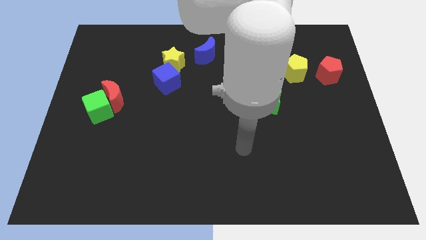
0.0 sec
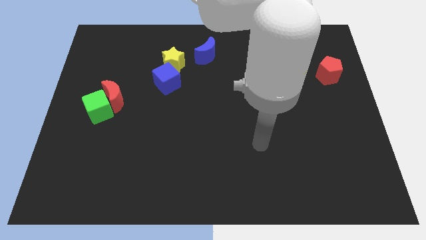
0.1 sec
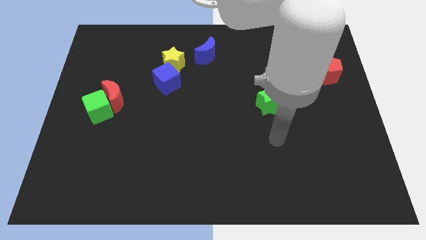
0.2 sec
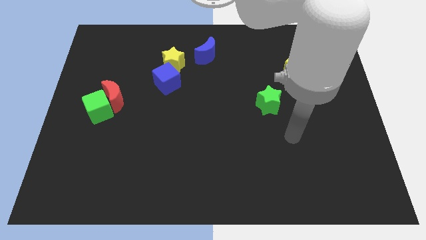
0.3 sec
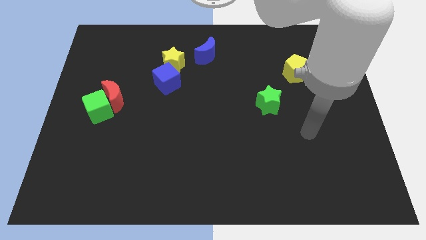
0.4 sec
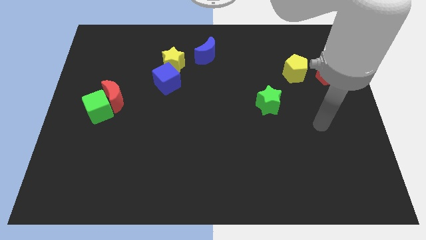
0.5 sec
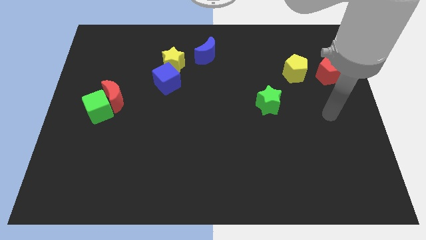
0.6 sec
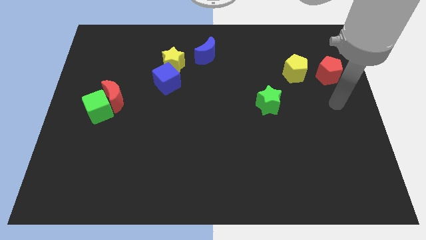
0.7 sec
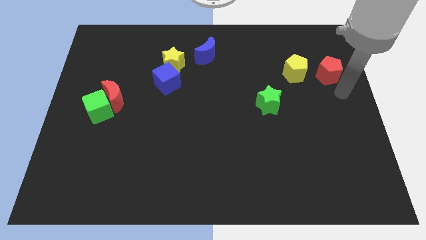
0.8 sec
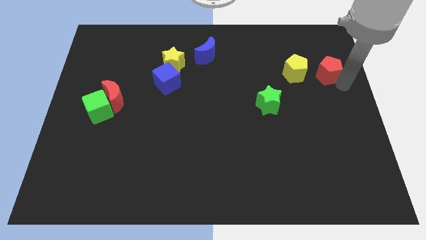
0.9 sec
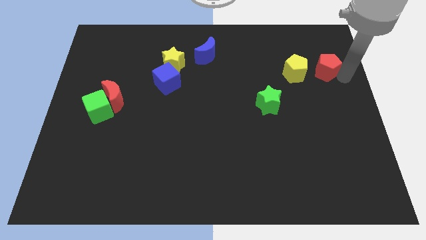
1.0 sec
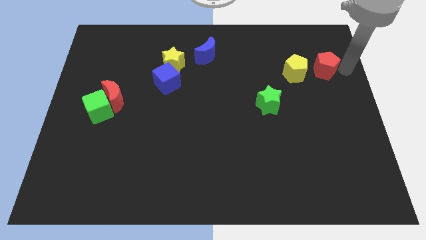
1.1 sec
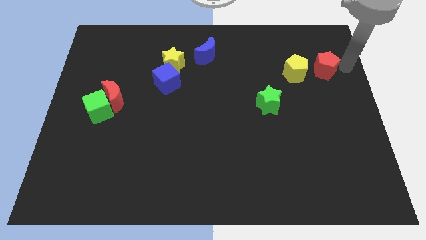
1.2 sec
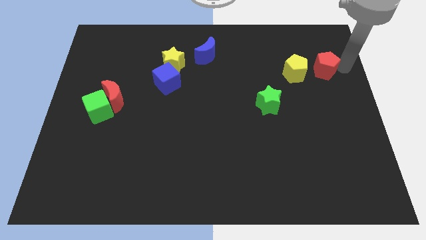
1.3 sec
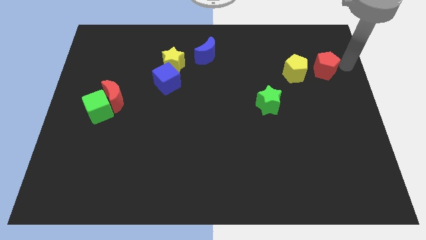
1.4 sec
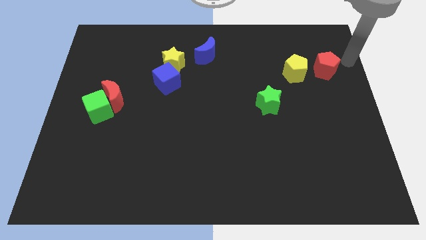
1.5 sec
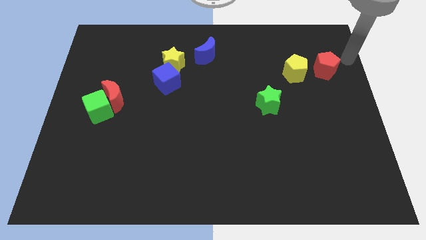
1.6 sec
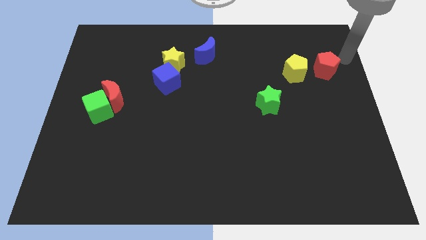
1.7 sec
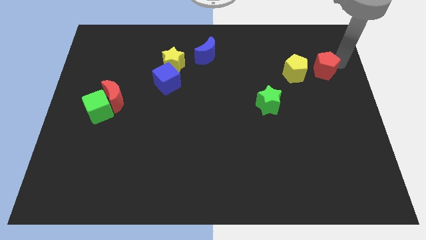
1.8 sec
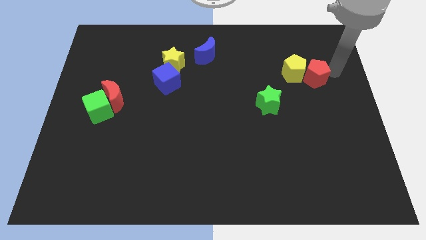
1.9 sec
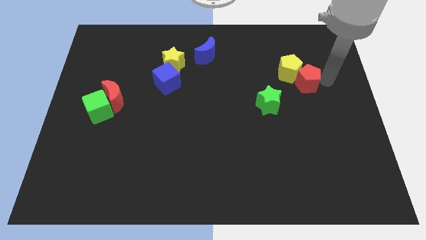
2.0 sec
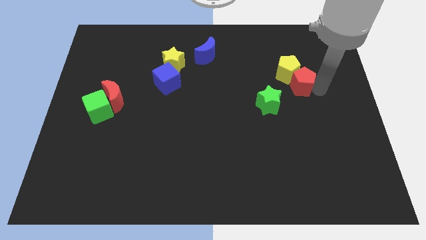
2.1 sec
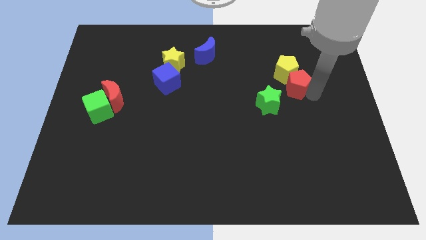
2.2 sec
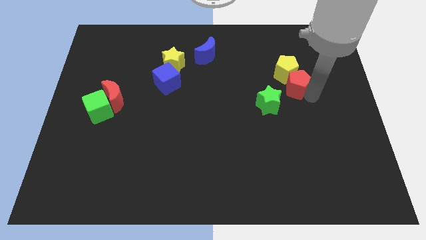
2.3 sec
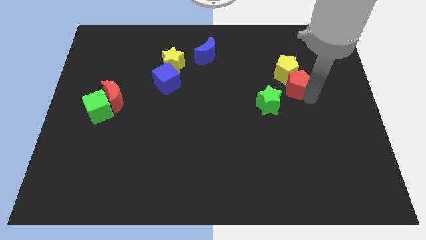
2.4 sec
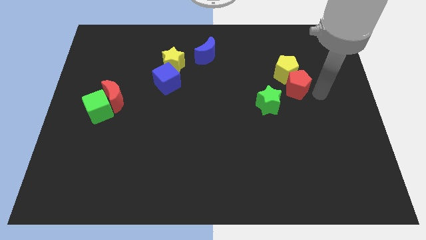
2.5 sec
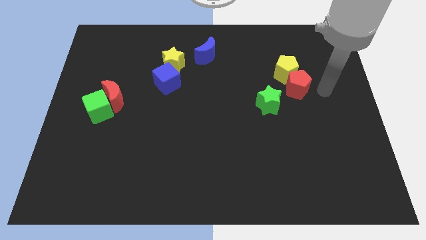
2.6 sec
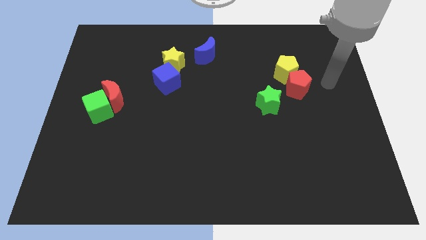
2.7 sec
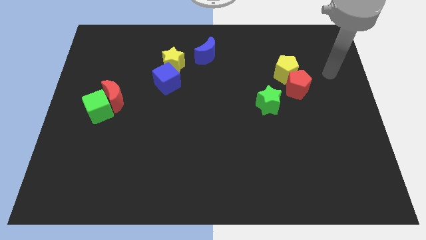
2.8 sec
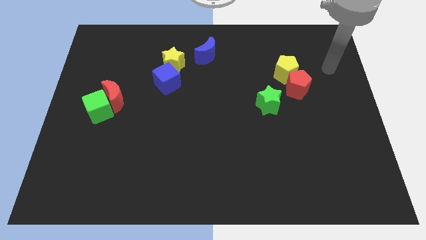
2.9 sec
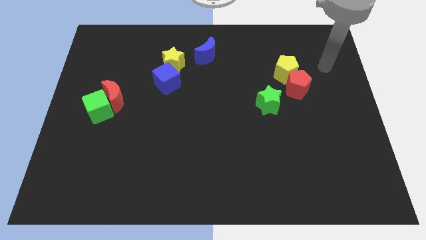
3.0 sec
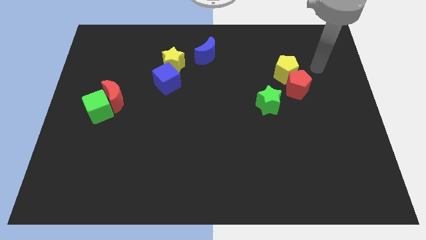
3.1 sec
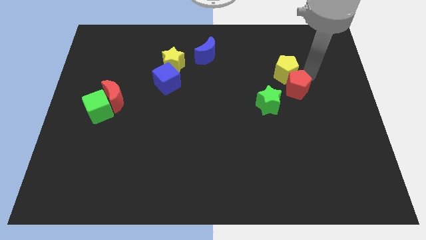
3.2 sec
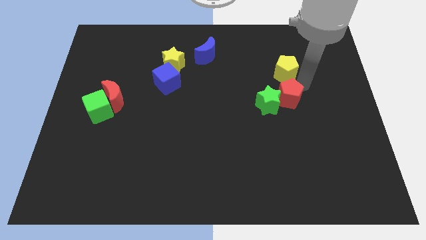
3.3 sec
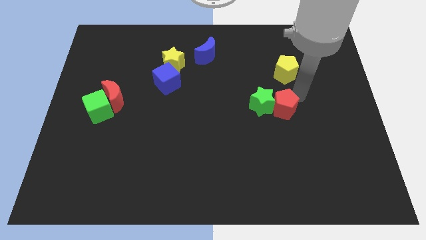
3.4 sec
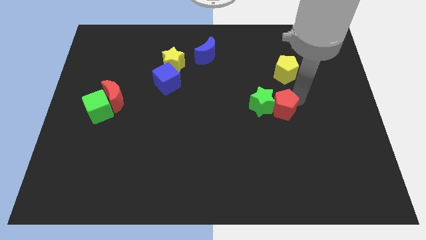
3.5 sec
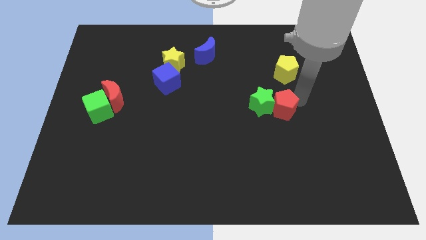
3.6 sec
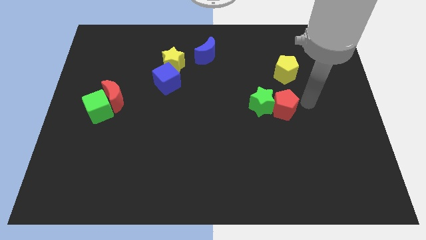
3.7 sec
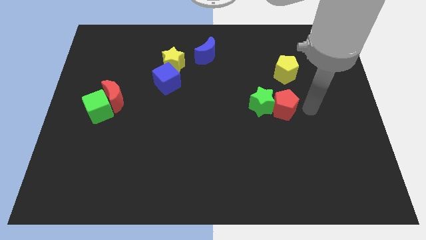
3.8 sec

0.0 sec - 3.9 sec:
push the red pentagon into the green star

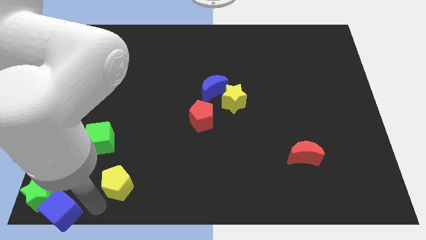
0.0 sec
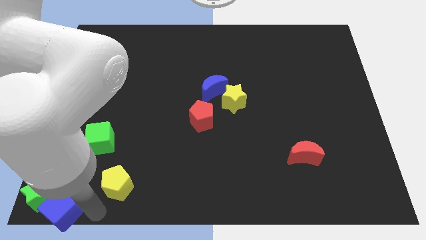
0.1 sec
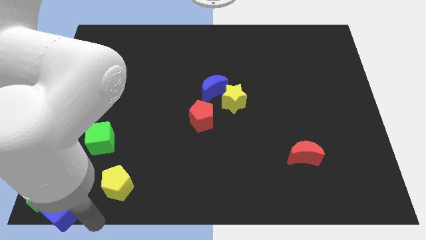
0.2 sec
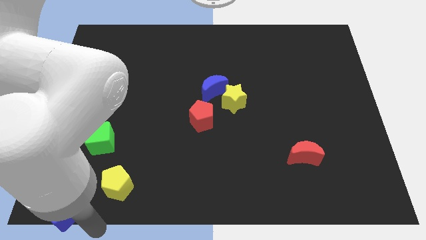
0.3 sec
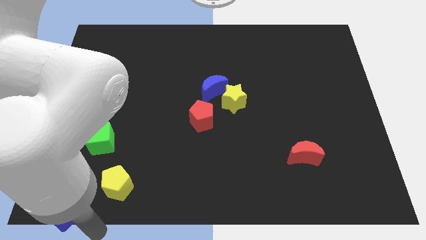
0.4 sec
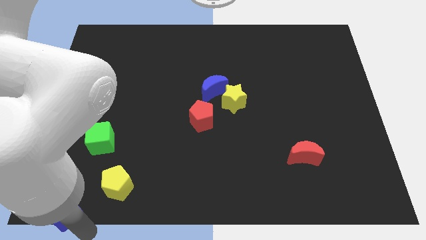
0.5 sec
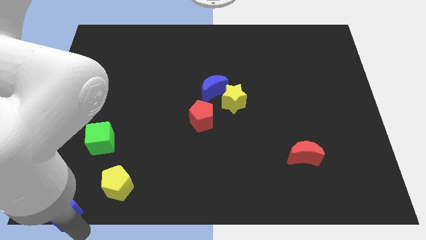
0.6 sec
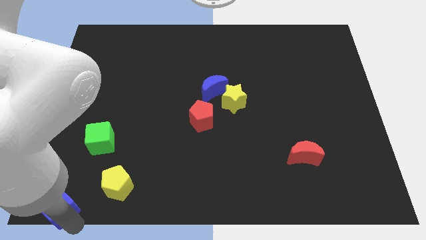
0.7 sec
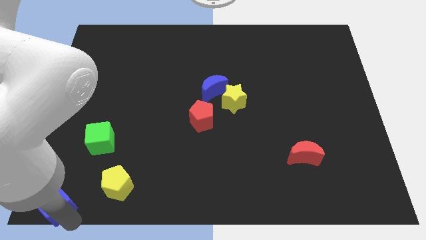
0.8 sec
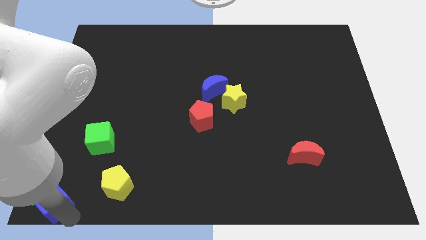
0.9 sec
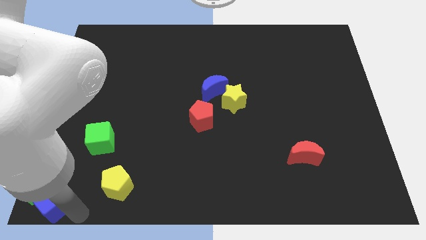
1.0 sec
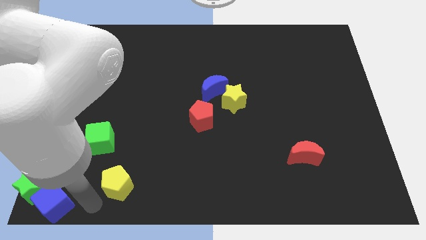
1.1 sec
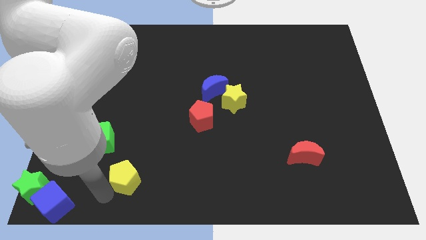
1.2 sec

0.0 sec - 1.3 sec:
push the blue cube into the green star

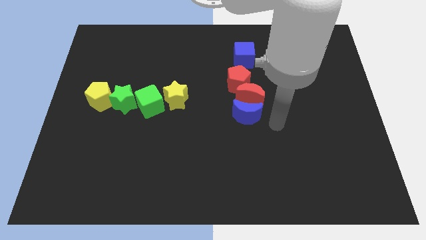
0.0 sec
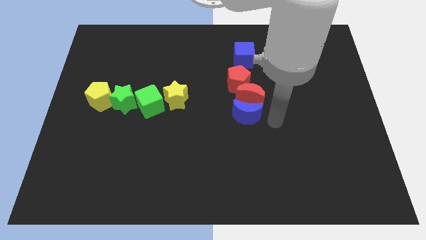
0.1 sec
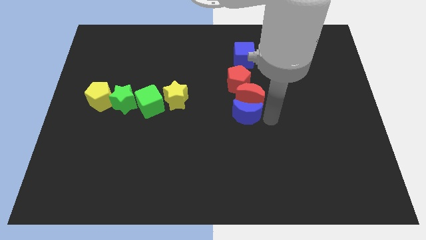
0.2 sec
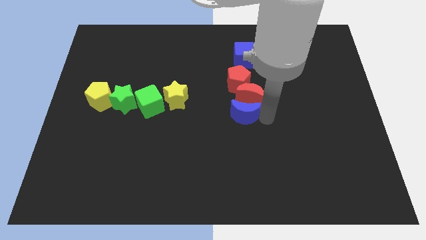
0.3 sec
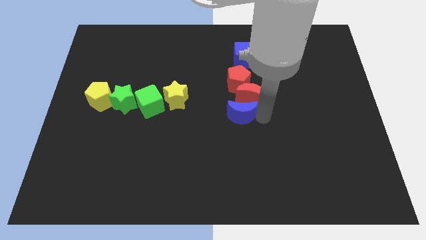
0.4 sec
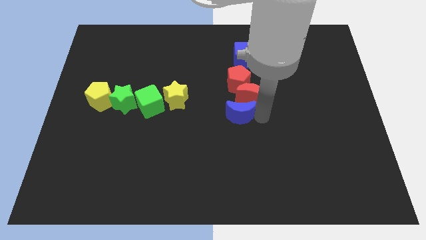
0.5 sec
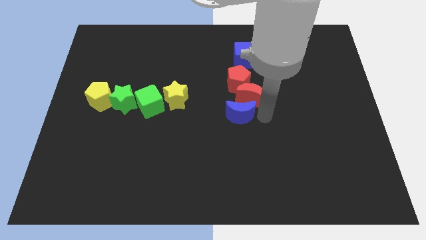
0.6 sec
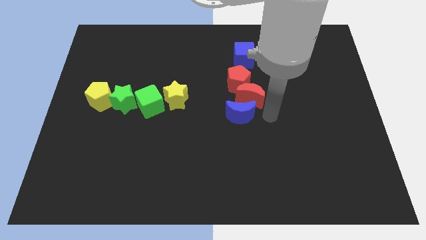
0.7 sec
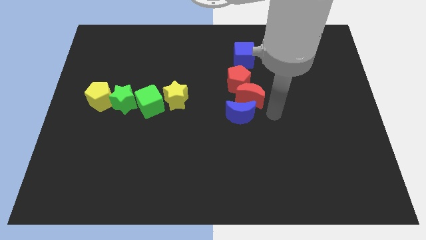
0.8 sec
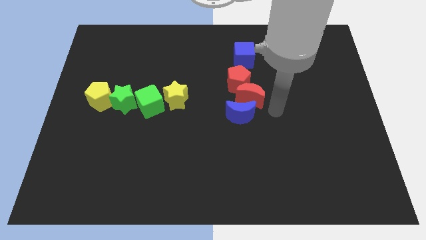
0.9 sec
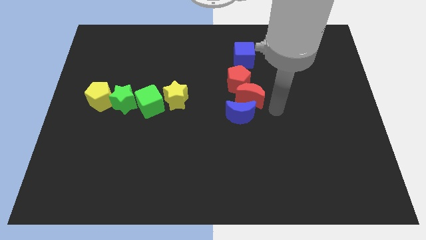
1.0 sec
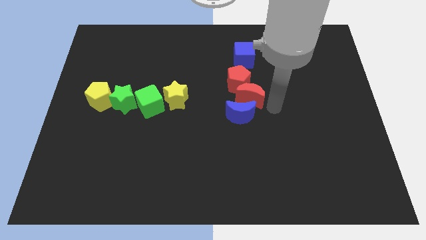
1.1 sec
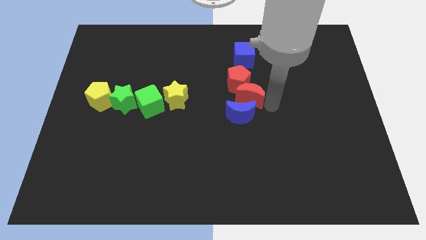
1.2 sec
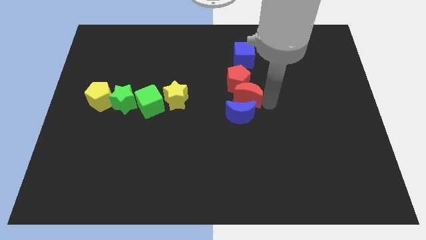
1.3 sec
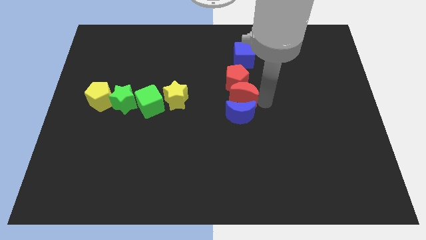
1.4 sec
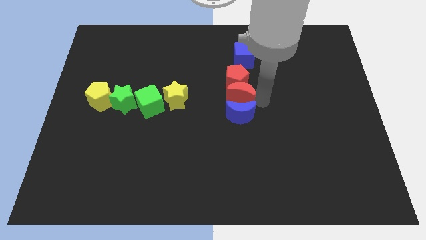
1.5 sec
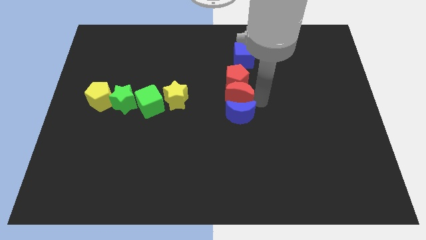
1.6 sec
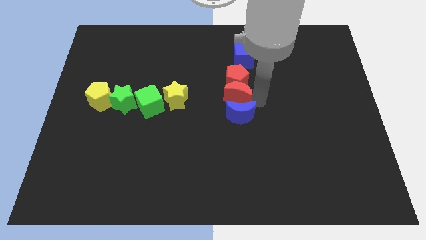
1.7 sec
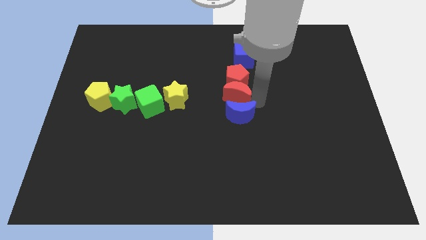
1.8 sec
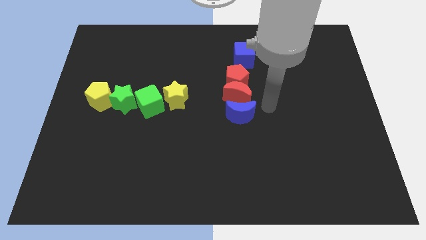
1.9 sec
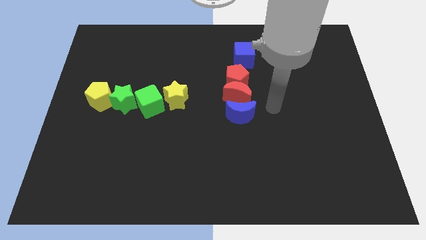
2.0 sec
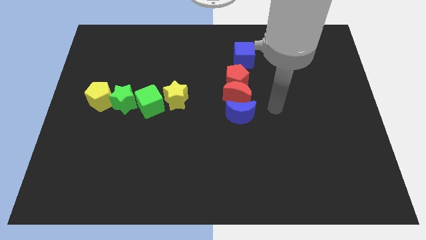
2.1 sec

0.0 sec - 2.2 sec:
move the red moon and blue moon to the center of the board

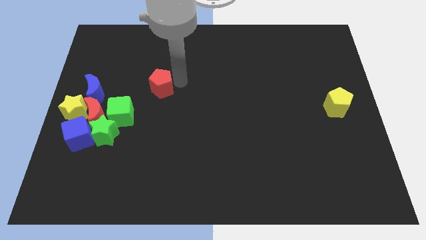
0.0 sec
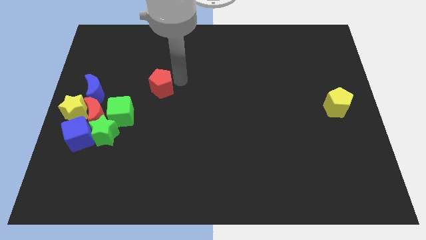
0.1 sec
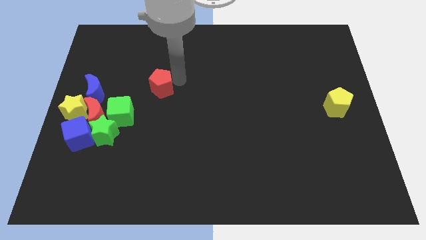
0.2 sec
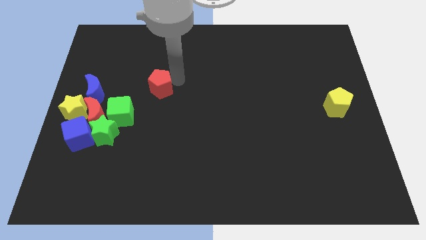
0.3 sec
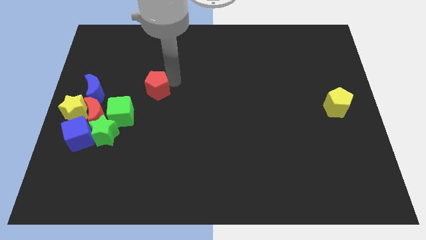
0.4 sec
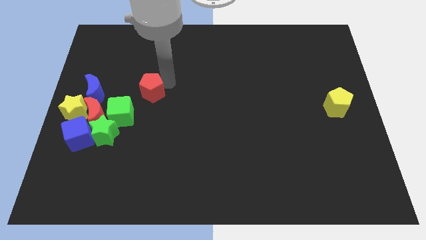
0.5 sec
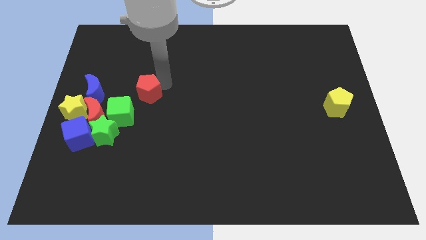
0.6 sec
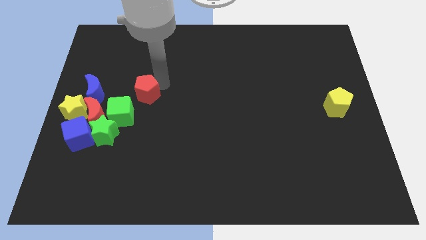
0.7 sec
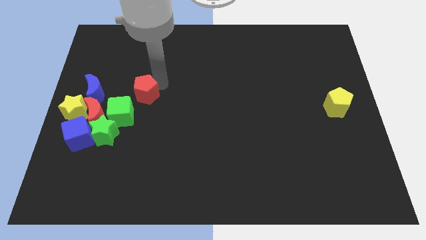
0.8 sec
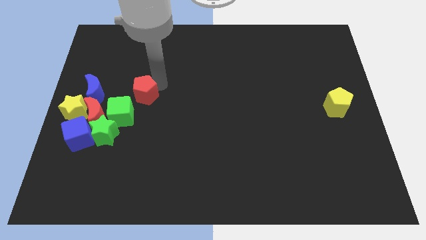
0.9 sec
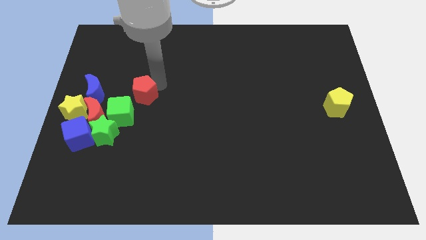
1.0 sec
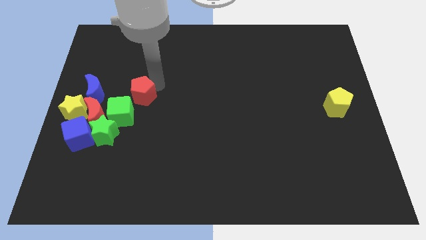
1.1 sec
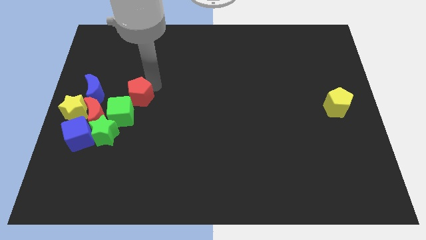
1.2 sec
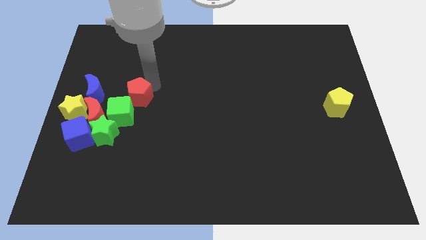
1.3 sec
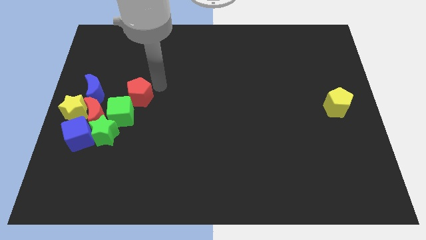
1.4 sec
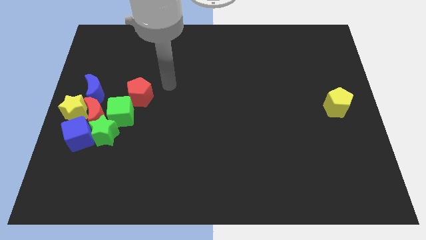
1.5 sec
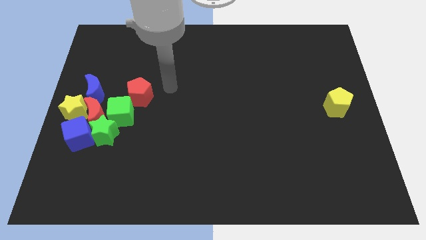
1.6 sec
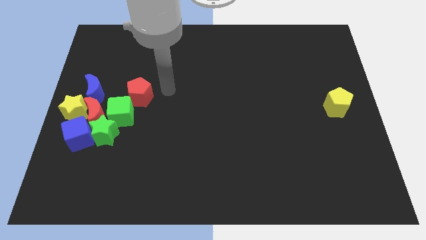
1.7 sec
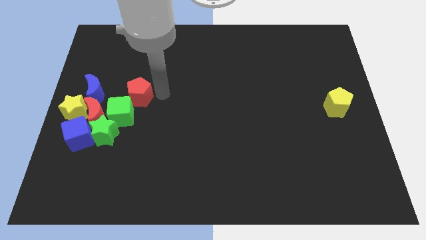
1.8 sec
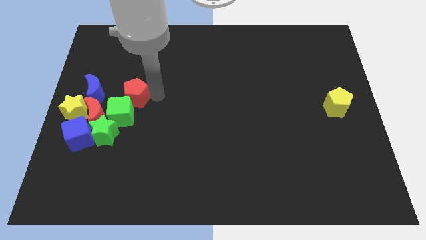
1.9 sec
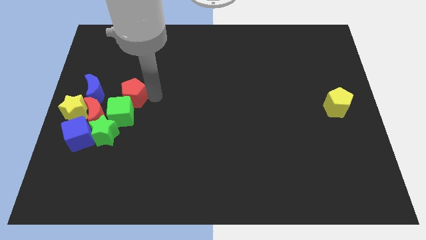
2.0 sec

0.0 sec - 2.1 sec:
move red pentagon into group of blocks
